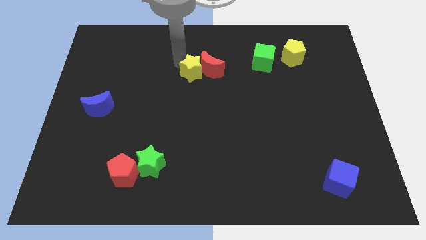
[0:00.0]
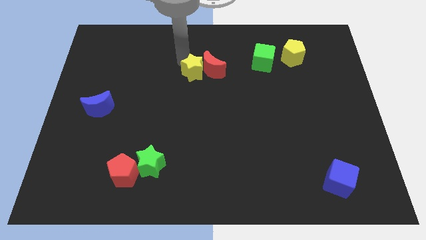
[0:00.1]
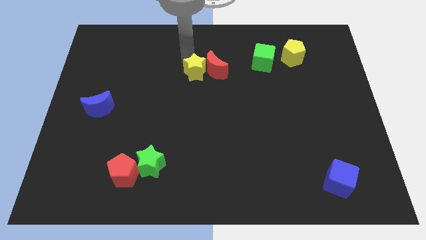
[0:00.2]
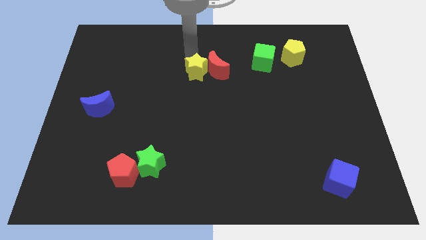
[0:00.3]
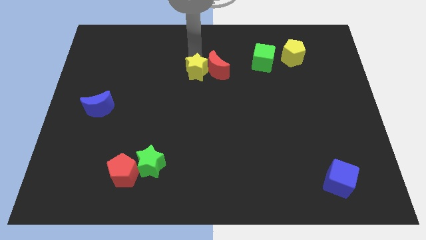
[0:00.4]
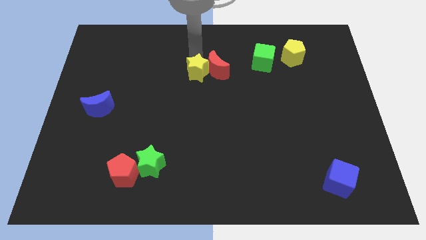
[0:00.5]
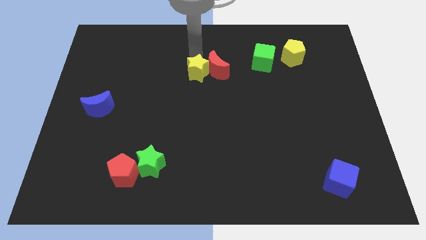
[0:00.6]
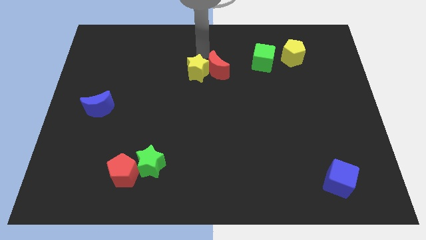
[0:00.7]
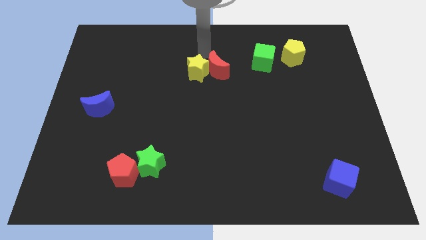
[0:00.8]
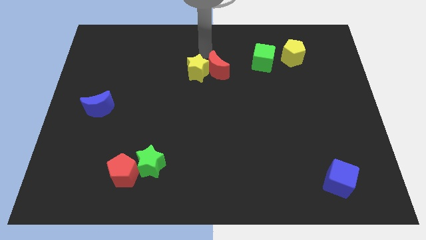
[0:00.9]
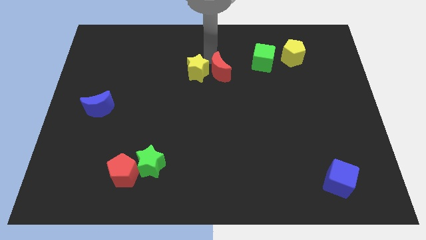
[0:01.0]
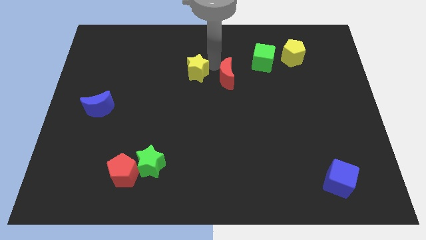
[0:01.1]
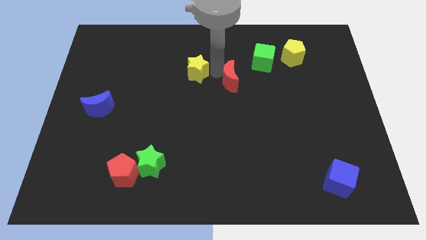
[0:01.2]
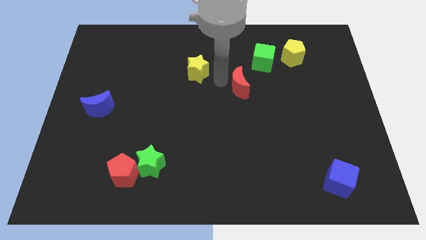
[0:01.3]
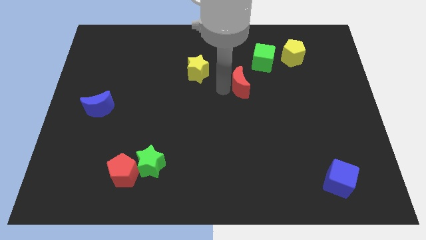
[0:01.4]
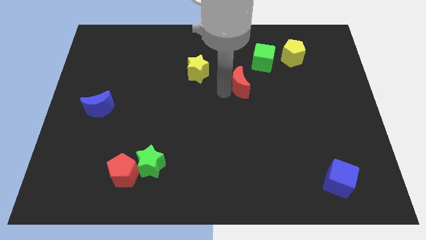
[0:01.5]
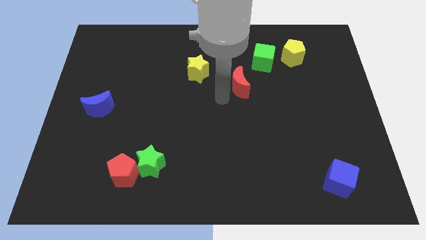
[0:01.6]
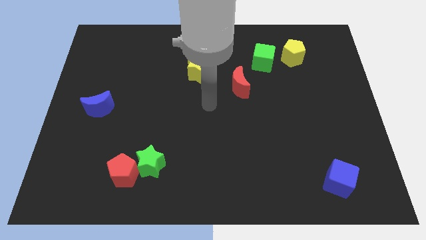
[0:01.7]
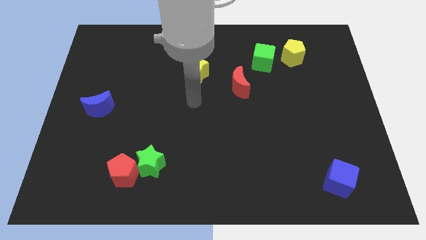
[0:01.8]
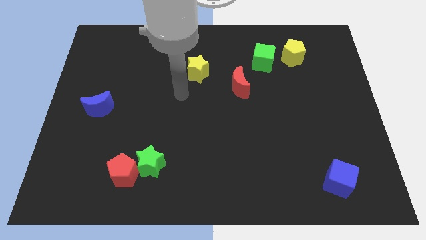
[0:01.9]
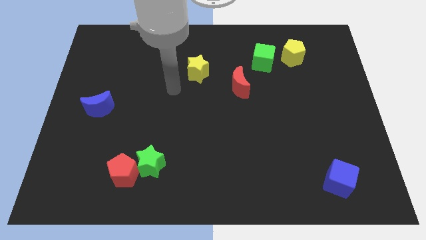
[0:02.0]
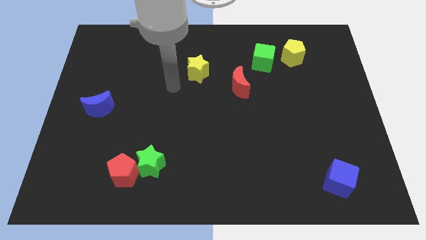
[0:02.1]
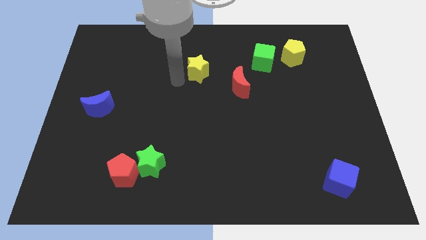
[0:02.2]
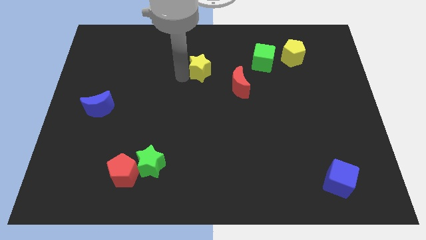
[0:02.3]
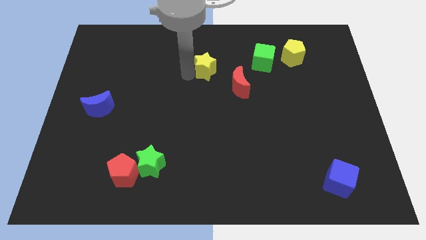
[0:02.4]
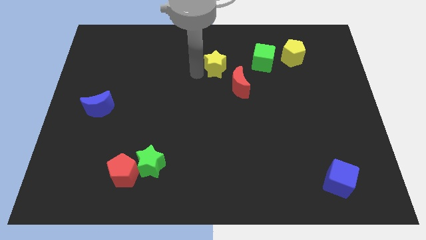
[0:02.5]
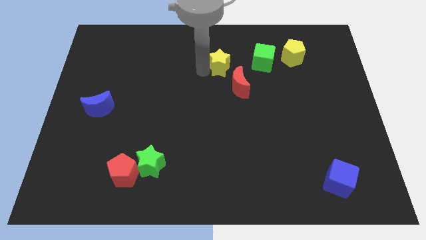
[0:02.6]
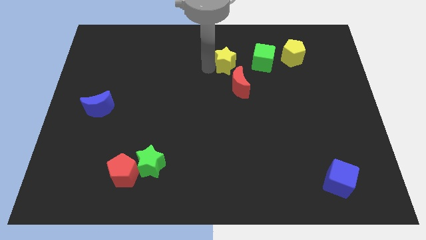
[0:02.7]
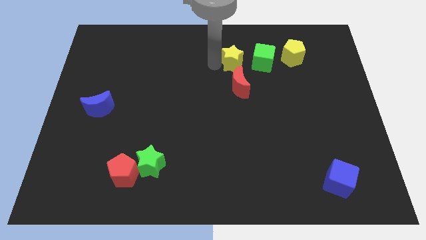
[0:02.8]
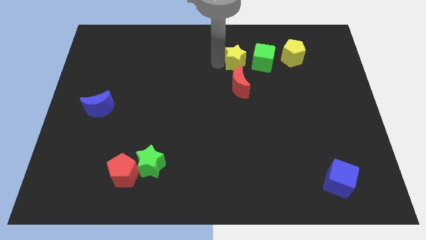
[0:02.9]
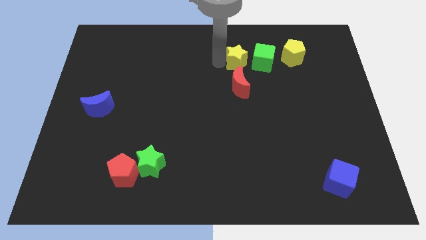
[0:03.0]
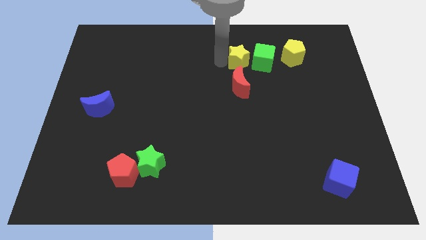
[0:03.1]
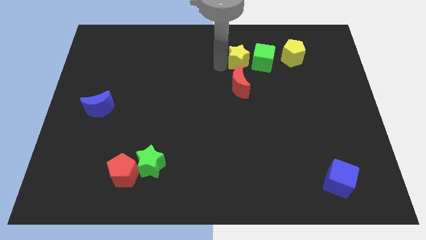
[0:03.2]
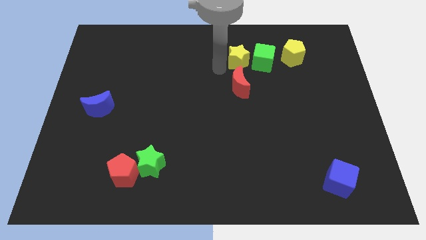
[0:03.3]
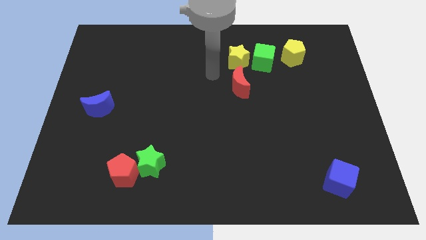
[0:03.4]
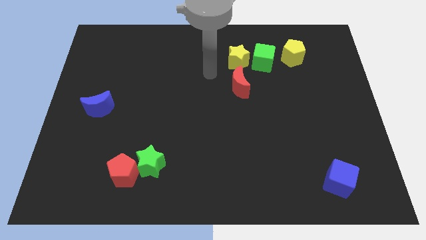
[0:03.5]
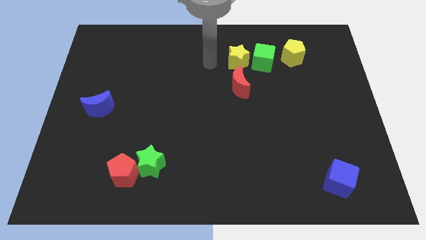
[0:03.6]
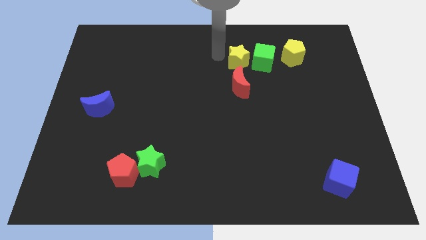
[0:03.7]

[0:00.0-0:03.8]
separate the yellow star from the red crescent

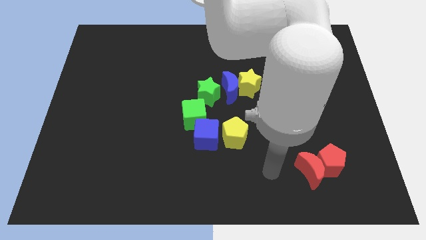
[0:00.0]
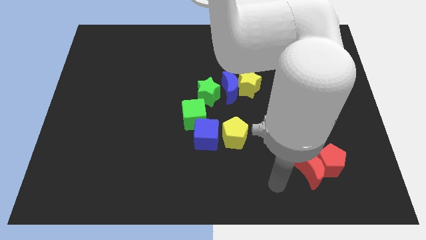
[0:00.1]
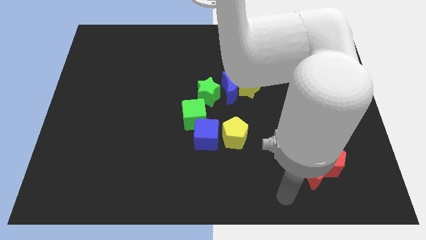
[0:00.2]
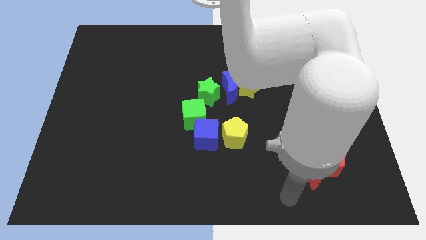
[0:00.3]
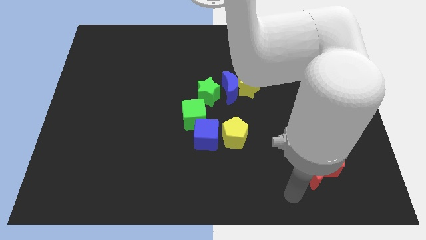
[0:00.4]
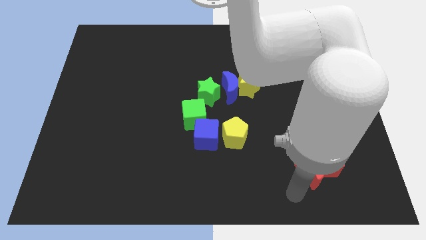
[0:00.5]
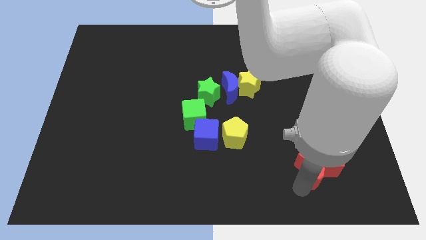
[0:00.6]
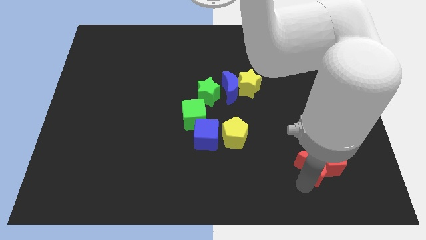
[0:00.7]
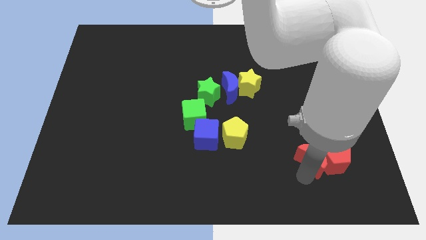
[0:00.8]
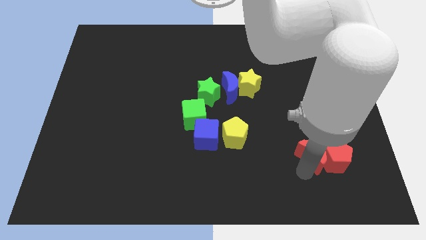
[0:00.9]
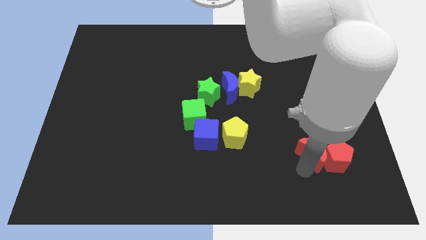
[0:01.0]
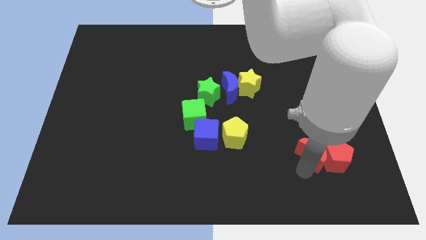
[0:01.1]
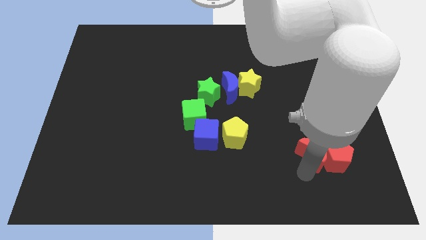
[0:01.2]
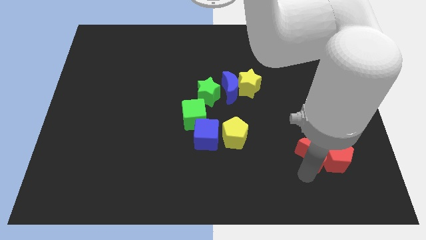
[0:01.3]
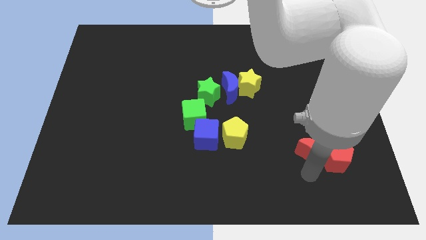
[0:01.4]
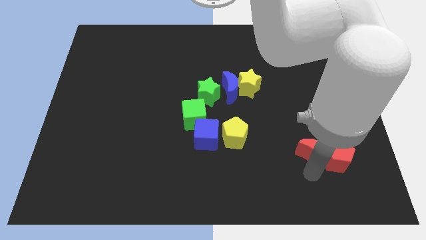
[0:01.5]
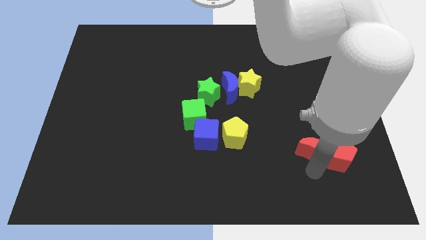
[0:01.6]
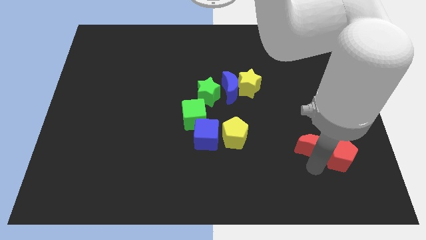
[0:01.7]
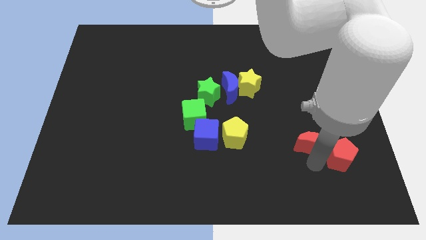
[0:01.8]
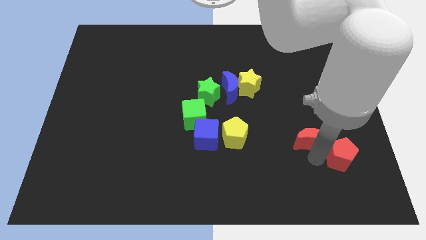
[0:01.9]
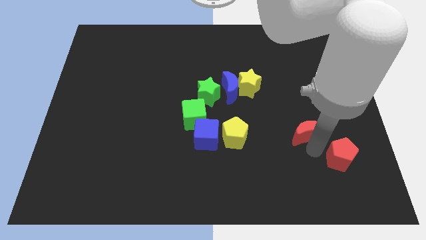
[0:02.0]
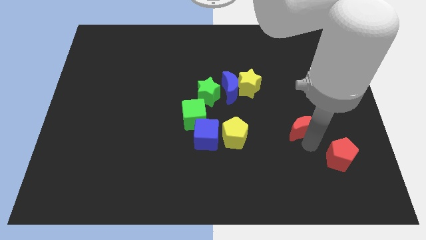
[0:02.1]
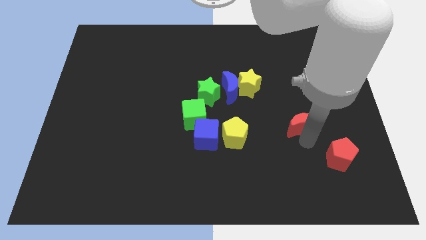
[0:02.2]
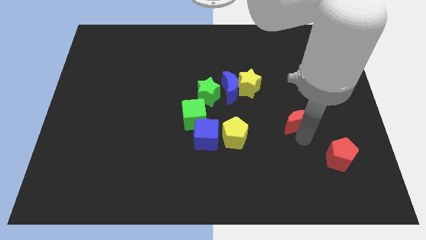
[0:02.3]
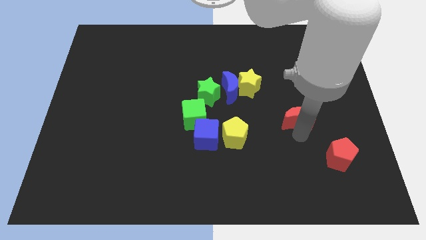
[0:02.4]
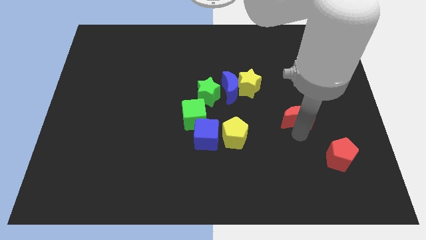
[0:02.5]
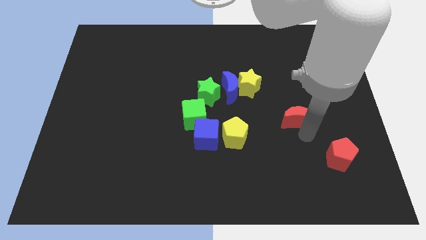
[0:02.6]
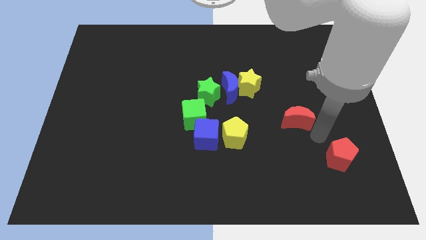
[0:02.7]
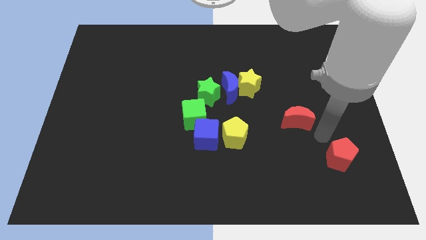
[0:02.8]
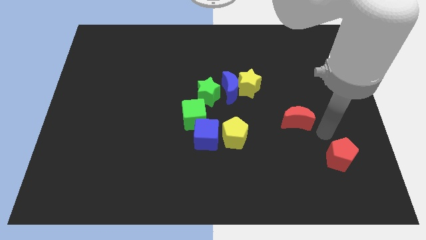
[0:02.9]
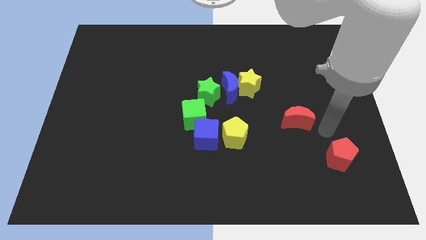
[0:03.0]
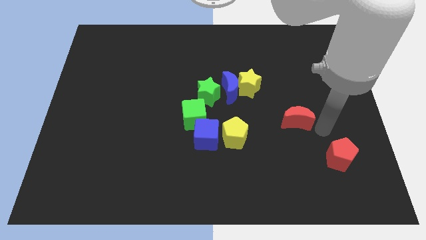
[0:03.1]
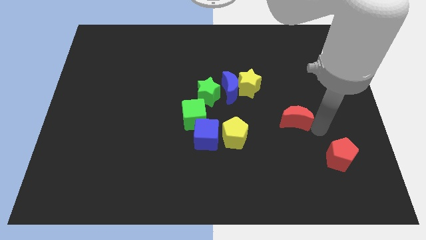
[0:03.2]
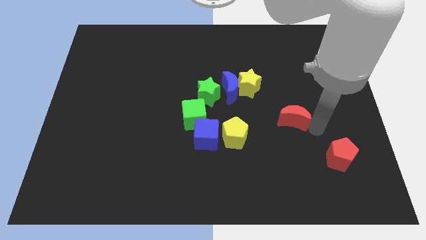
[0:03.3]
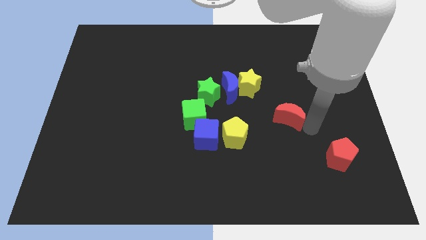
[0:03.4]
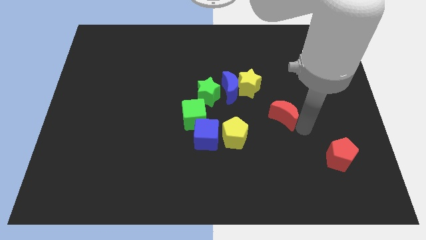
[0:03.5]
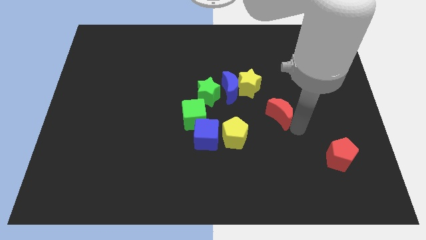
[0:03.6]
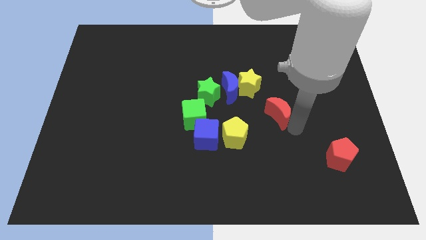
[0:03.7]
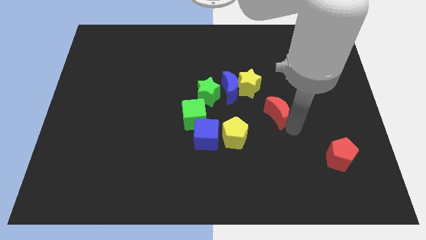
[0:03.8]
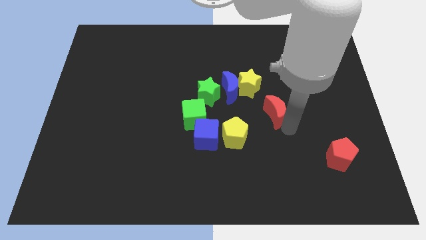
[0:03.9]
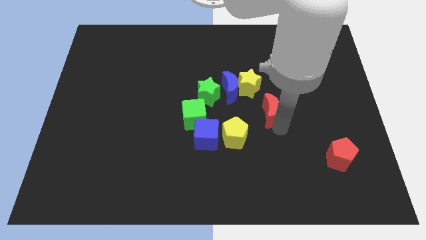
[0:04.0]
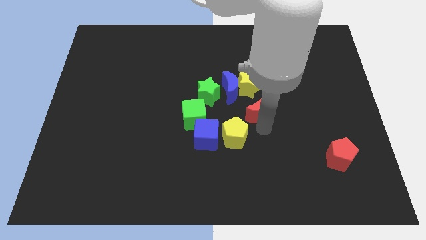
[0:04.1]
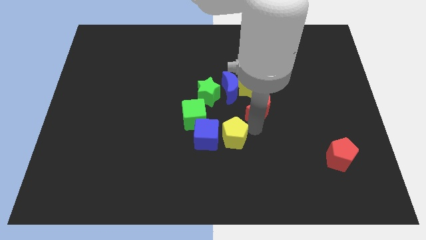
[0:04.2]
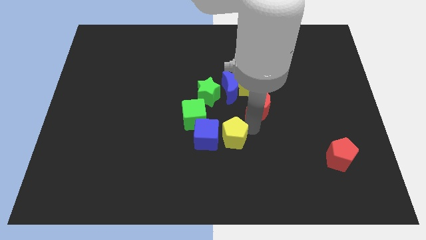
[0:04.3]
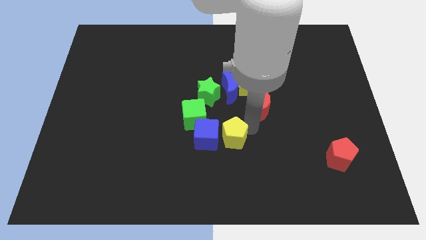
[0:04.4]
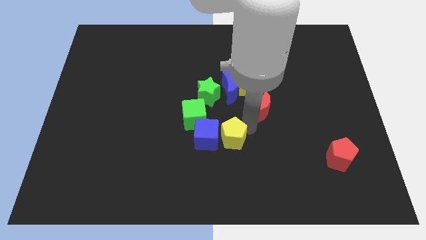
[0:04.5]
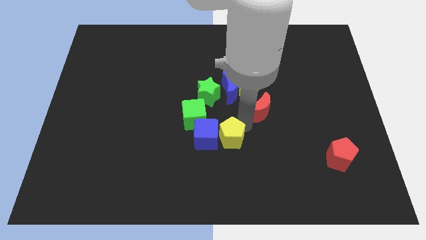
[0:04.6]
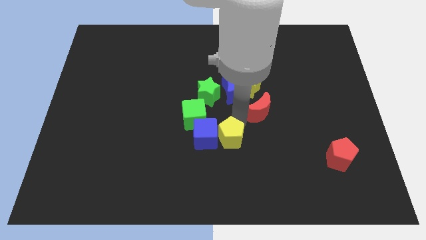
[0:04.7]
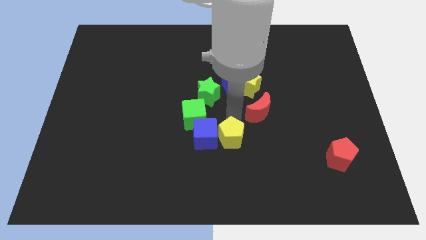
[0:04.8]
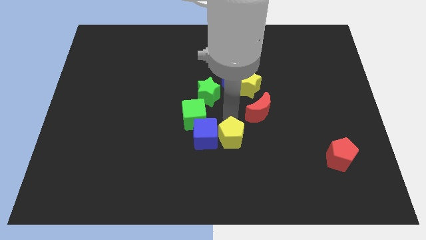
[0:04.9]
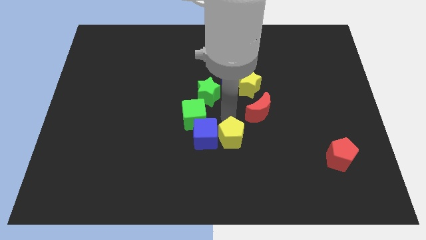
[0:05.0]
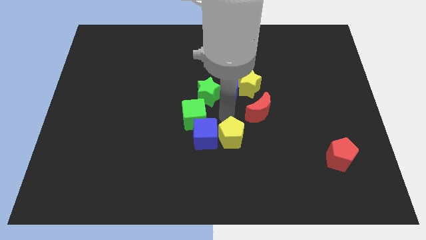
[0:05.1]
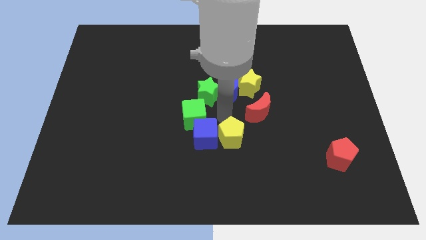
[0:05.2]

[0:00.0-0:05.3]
separate red crescent from red pentagon
